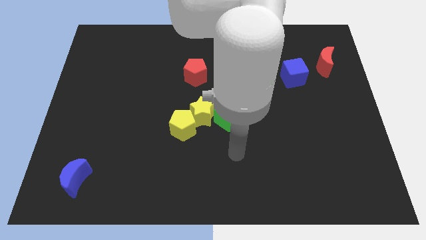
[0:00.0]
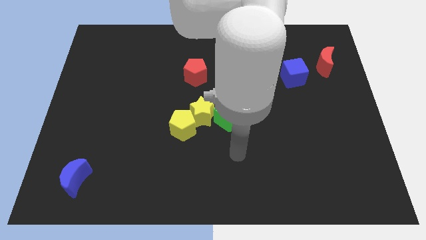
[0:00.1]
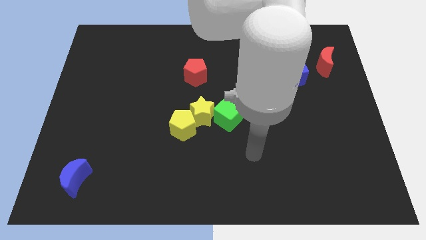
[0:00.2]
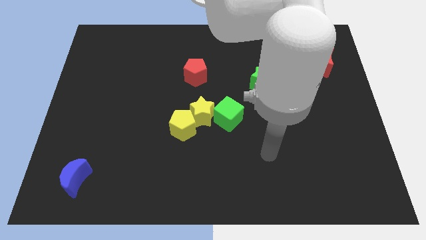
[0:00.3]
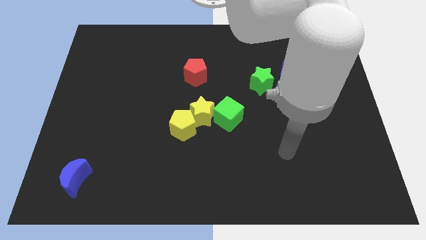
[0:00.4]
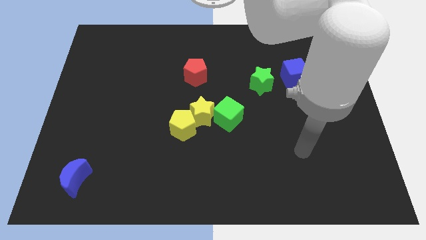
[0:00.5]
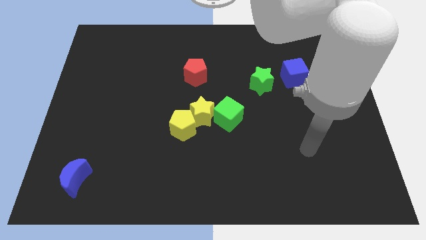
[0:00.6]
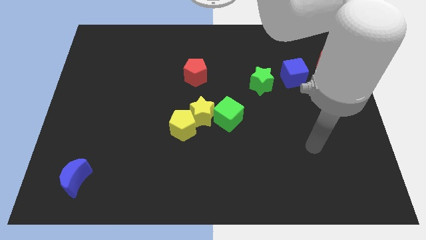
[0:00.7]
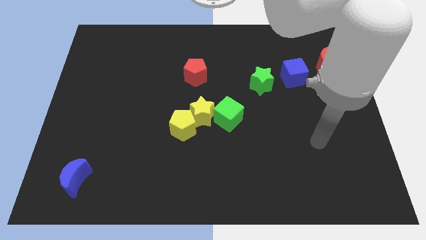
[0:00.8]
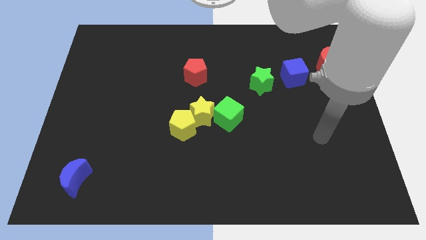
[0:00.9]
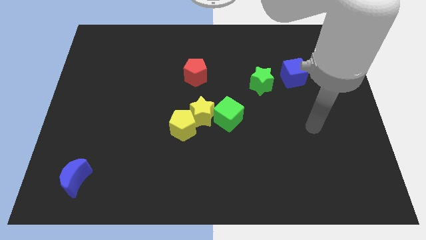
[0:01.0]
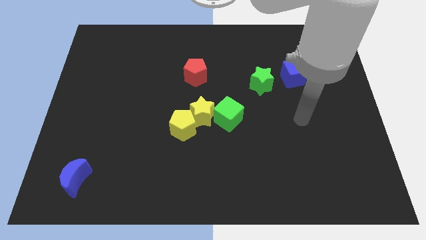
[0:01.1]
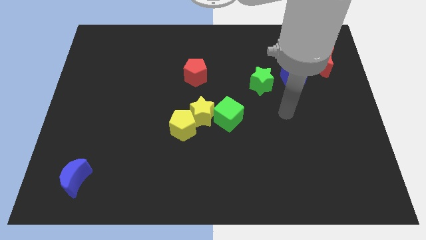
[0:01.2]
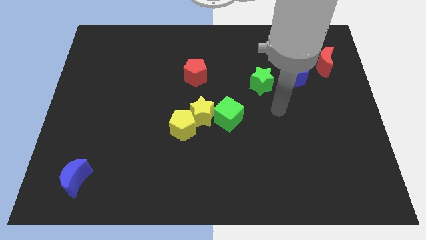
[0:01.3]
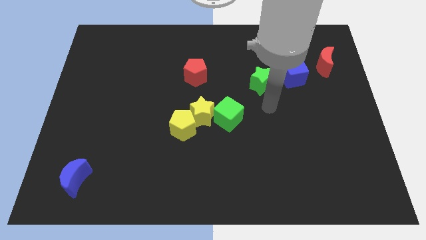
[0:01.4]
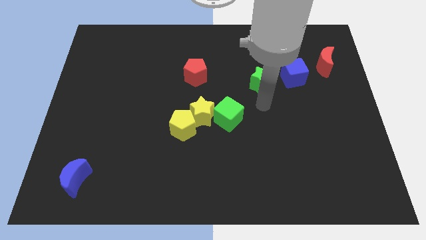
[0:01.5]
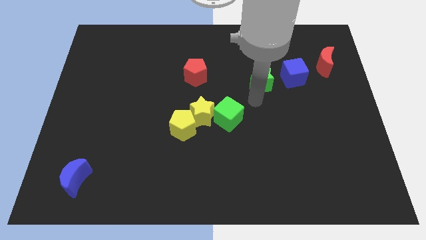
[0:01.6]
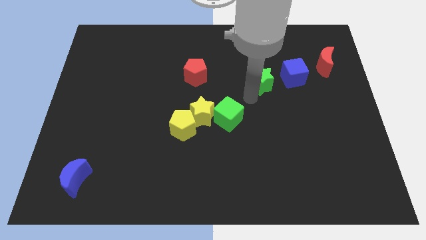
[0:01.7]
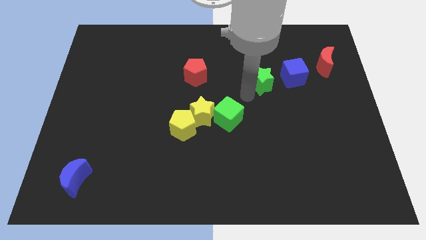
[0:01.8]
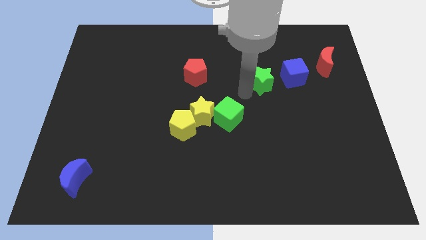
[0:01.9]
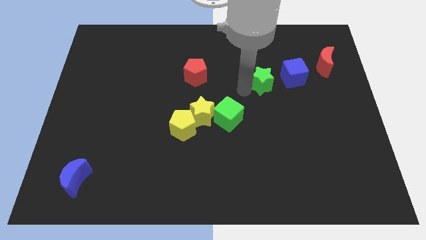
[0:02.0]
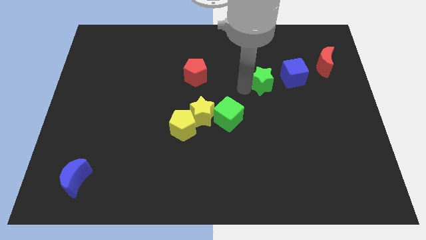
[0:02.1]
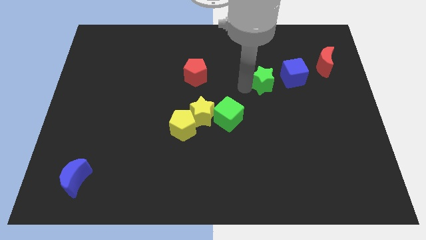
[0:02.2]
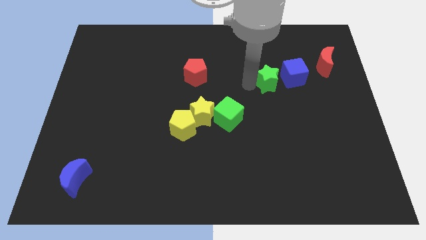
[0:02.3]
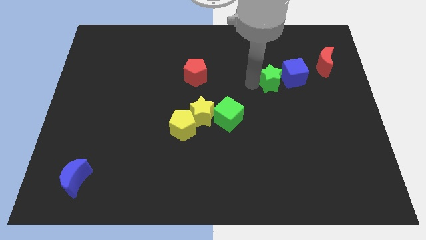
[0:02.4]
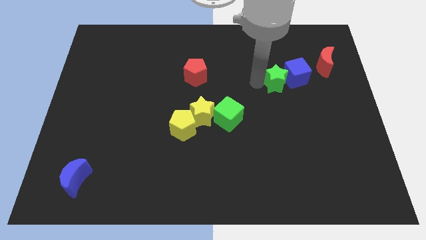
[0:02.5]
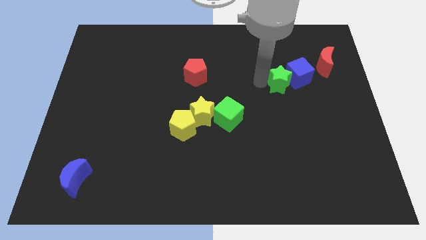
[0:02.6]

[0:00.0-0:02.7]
slide the green star close to the blue cube

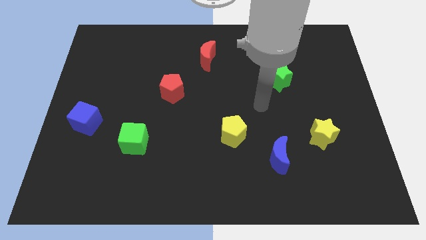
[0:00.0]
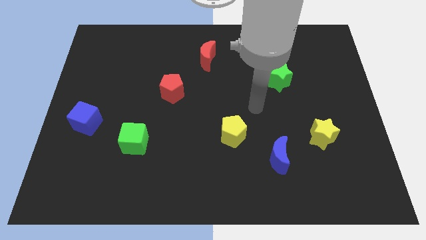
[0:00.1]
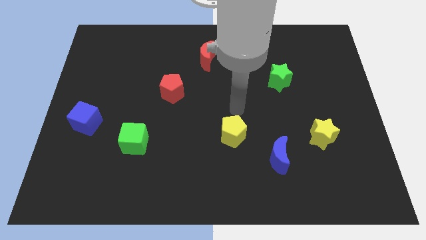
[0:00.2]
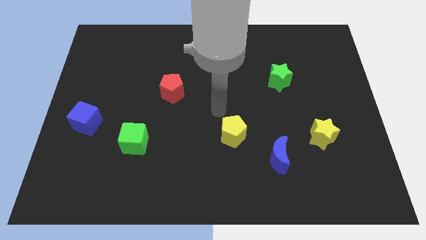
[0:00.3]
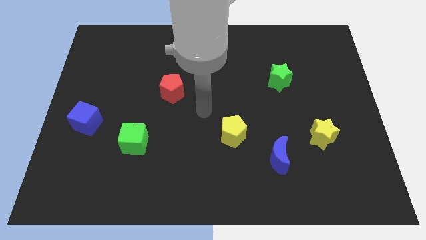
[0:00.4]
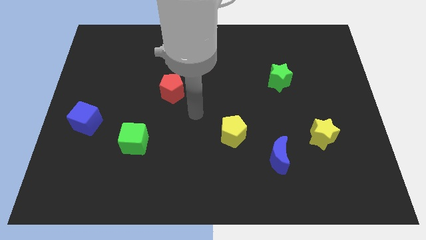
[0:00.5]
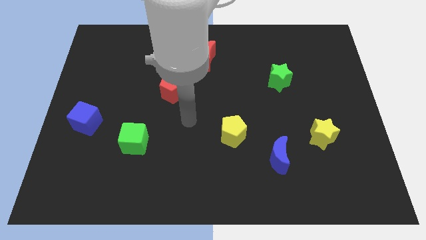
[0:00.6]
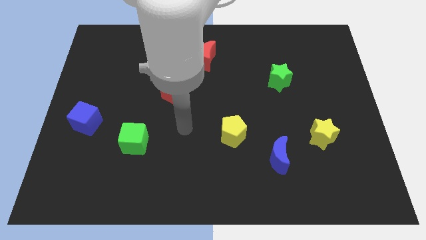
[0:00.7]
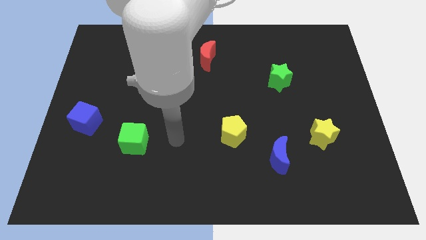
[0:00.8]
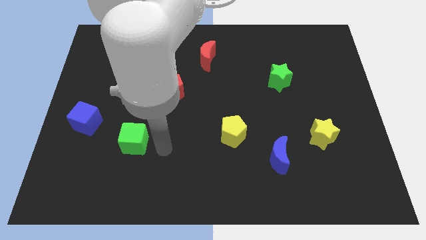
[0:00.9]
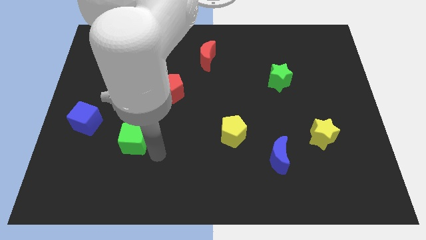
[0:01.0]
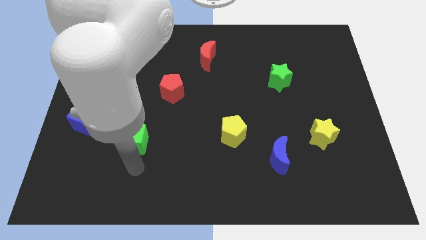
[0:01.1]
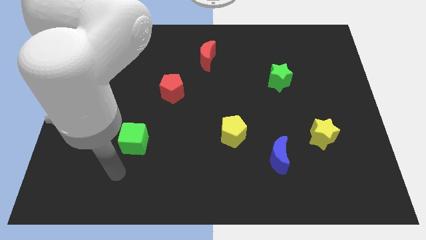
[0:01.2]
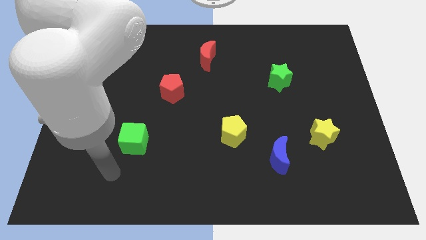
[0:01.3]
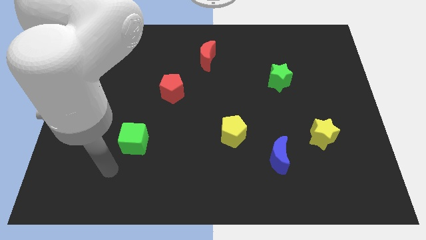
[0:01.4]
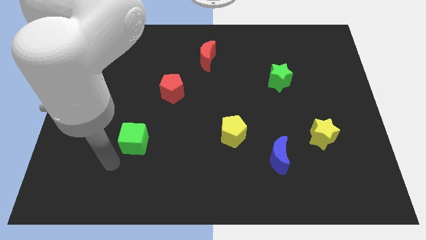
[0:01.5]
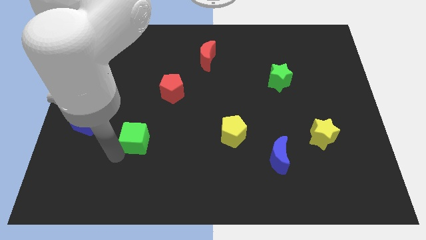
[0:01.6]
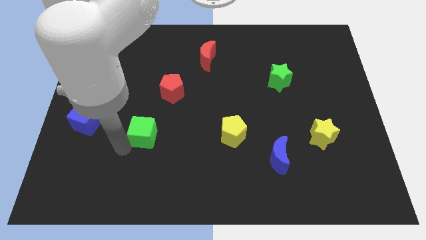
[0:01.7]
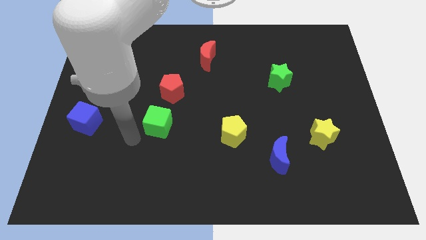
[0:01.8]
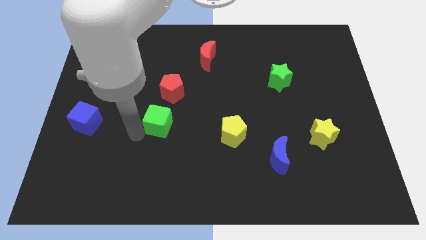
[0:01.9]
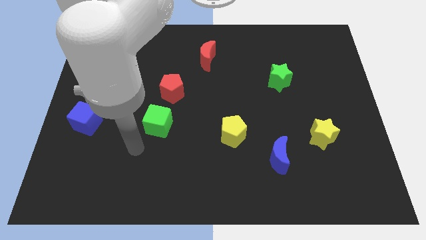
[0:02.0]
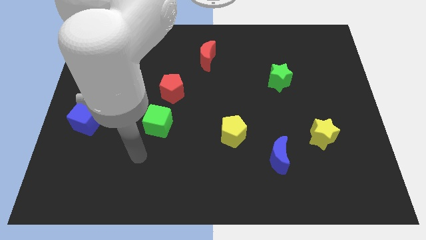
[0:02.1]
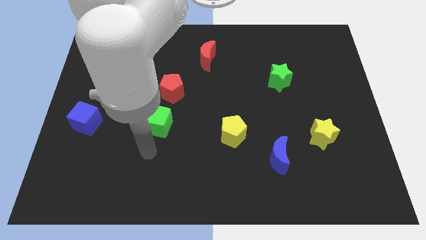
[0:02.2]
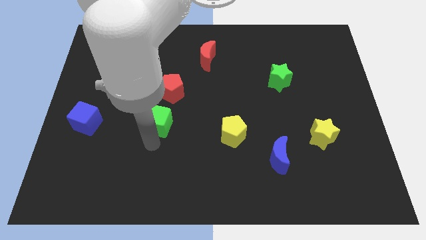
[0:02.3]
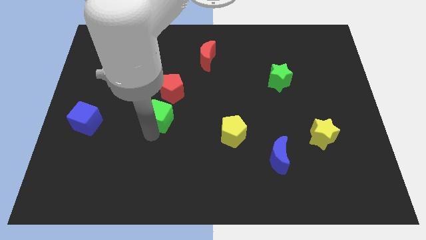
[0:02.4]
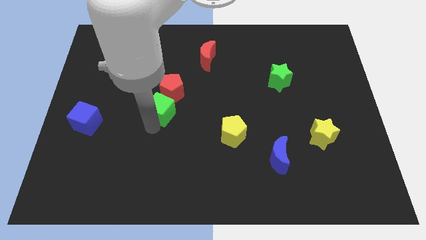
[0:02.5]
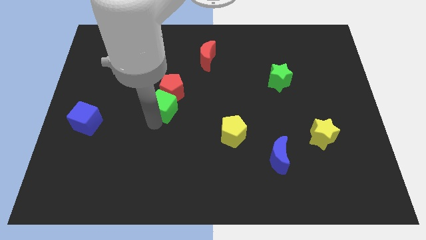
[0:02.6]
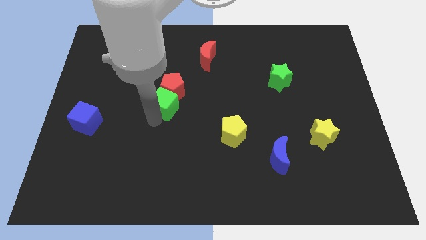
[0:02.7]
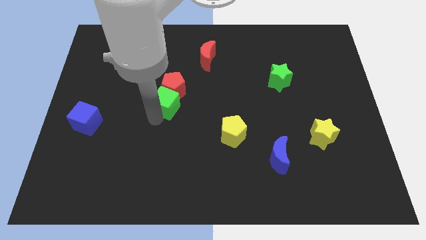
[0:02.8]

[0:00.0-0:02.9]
put the green cube to the red pentagon

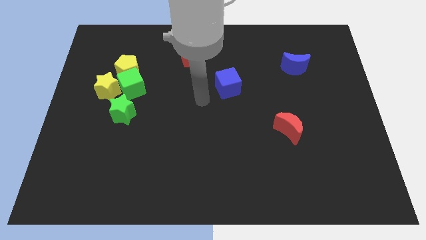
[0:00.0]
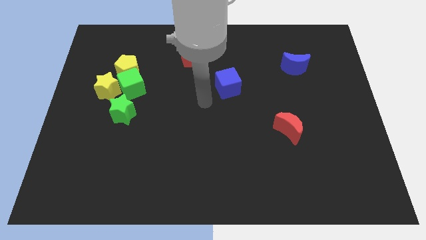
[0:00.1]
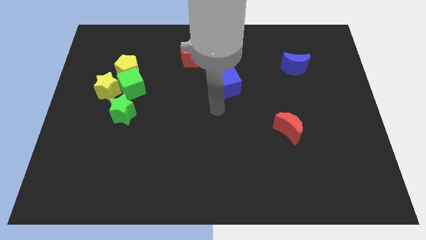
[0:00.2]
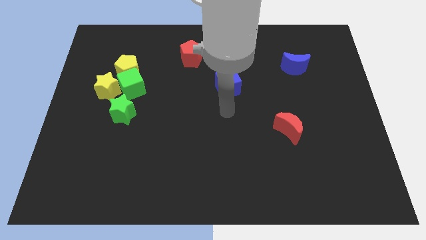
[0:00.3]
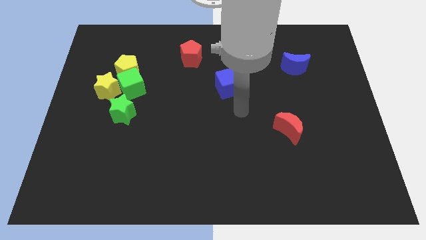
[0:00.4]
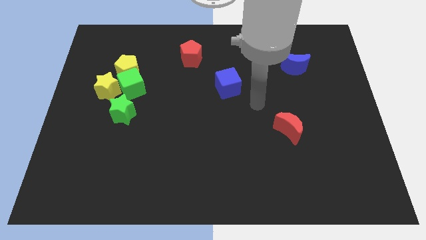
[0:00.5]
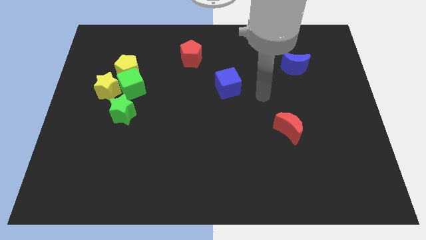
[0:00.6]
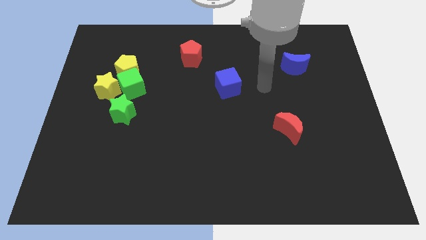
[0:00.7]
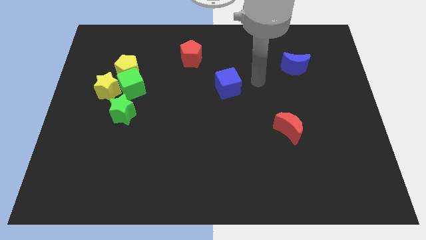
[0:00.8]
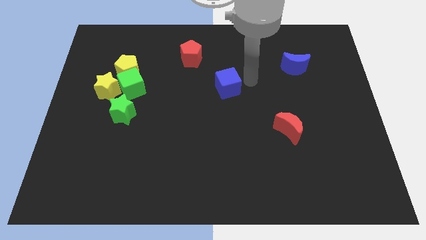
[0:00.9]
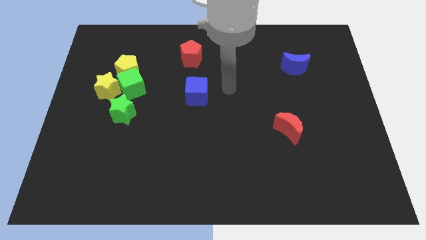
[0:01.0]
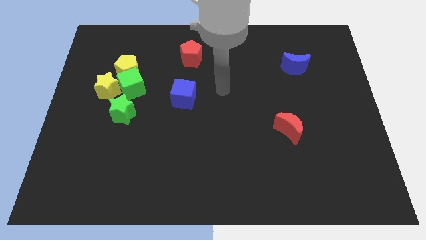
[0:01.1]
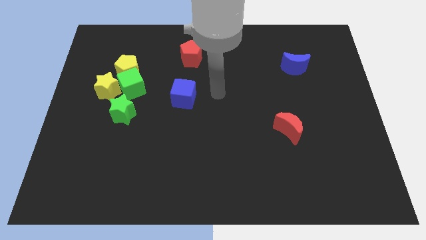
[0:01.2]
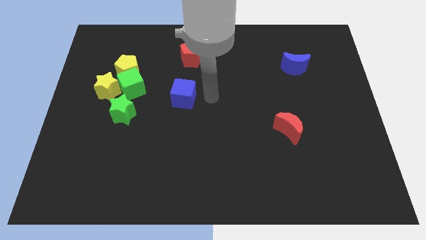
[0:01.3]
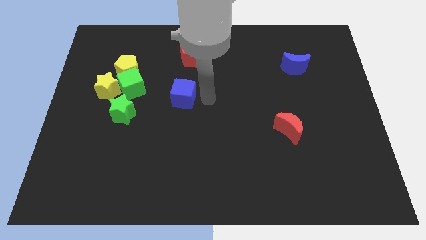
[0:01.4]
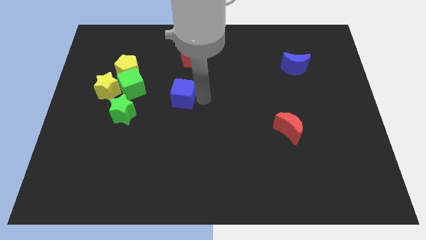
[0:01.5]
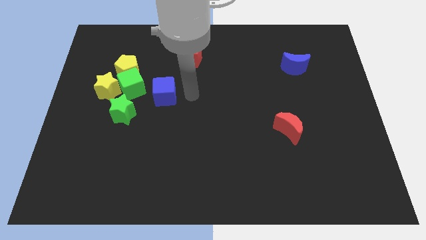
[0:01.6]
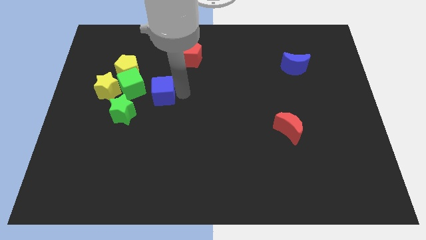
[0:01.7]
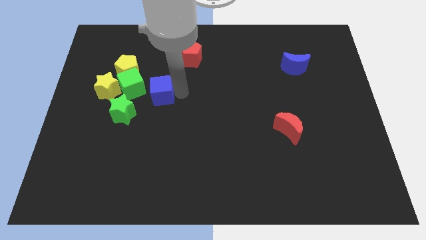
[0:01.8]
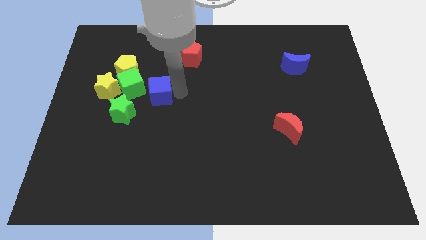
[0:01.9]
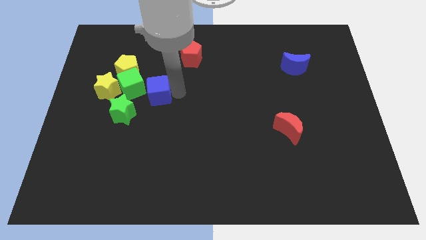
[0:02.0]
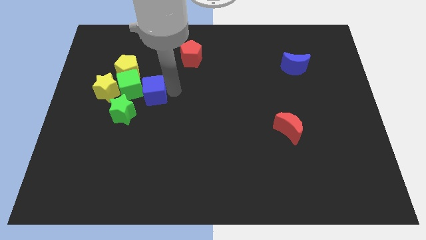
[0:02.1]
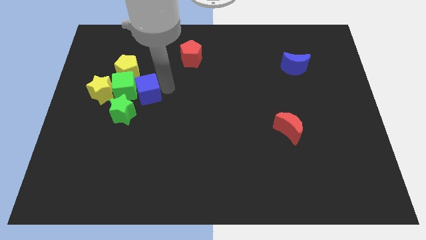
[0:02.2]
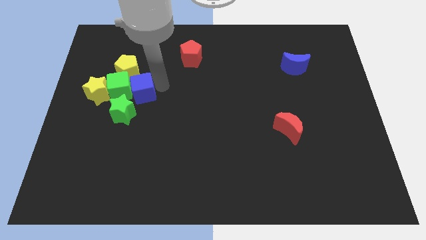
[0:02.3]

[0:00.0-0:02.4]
put the blue cube next to the green cube
